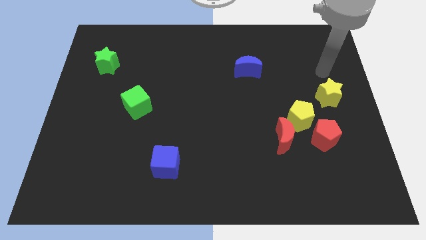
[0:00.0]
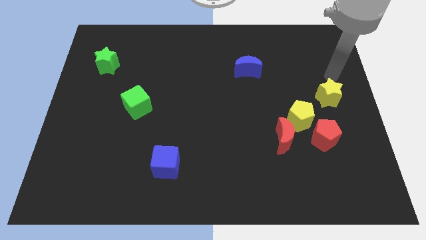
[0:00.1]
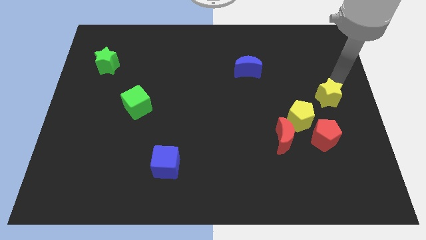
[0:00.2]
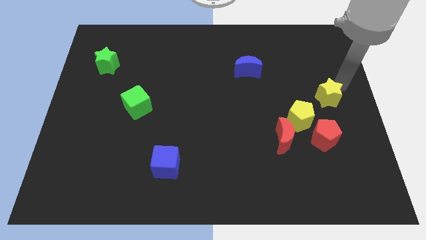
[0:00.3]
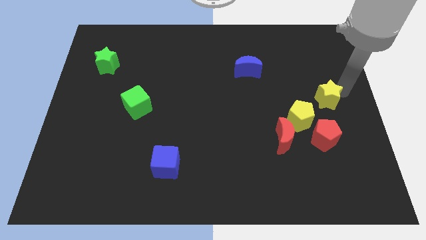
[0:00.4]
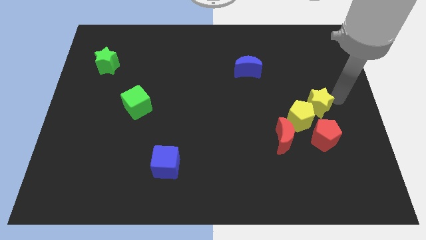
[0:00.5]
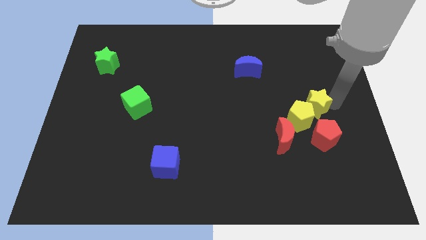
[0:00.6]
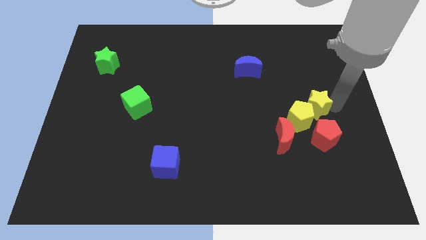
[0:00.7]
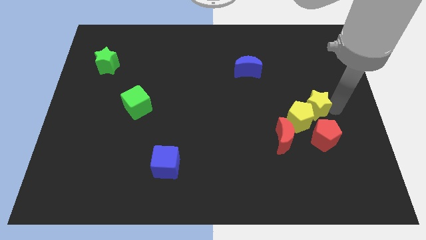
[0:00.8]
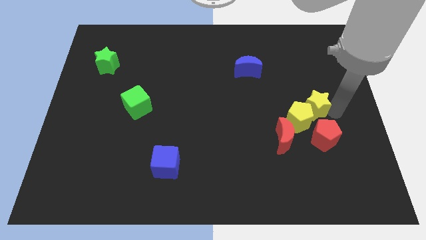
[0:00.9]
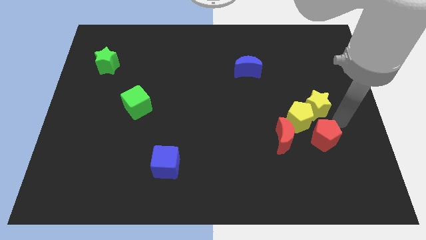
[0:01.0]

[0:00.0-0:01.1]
push the yellow star into the yellow pentagon

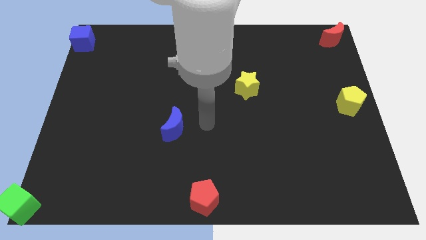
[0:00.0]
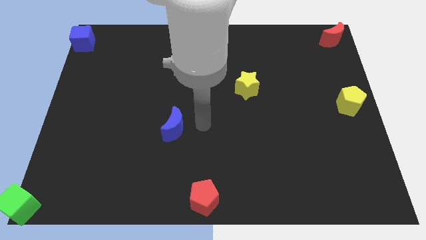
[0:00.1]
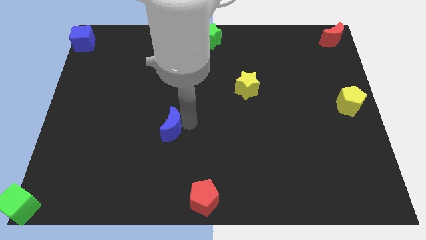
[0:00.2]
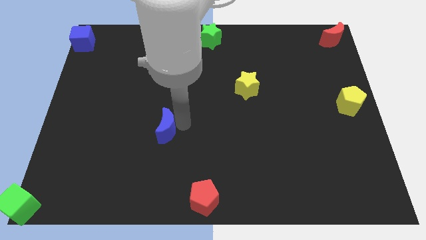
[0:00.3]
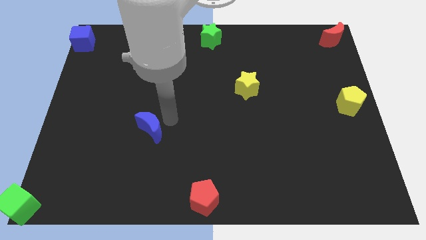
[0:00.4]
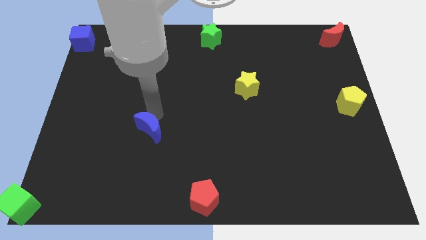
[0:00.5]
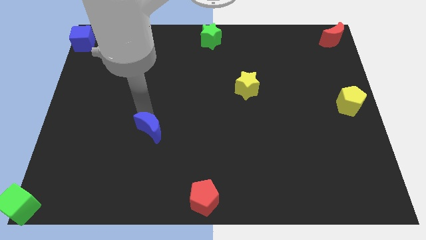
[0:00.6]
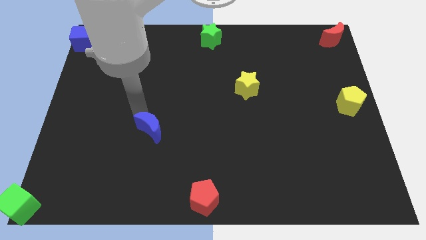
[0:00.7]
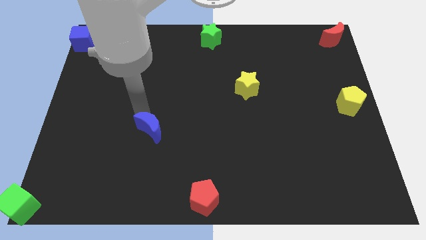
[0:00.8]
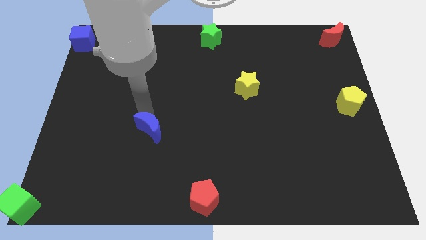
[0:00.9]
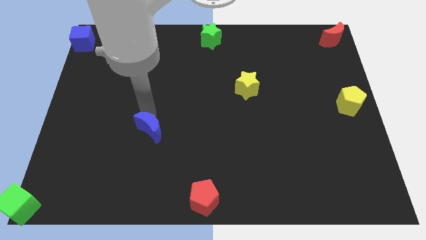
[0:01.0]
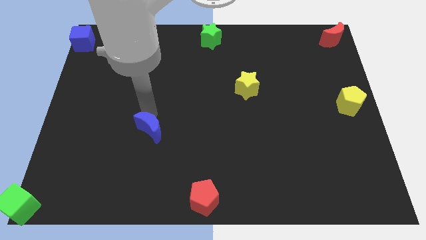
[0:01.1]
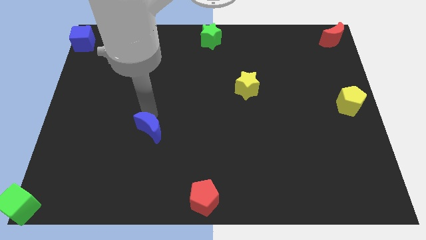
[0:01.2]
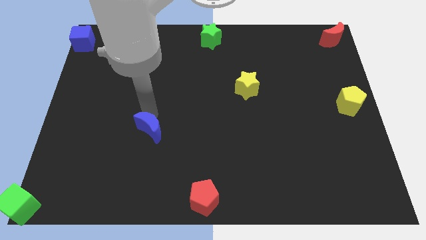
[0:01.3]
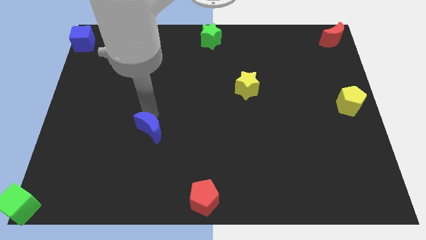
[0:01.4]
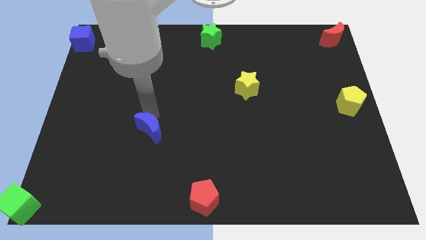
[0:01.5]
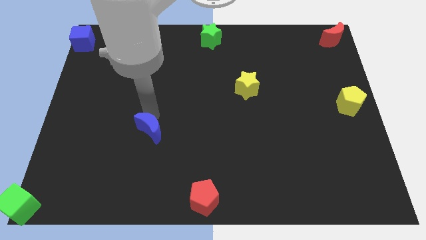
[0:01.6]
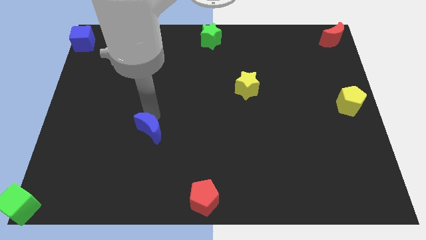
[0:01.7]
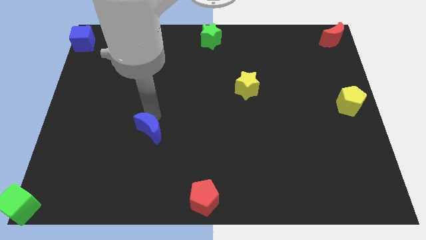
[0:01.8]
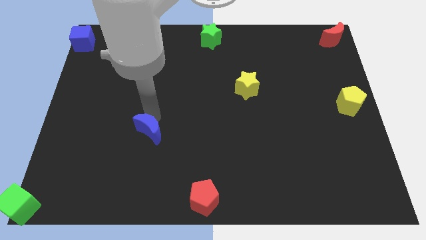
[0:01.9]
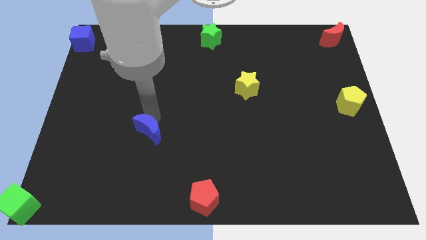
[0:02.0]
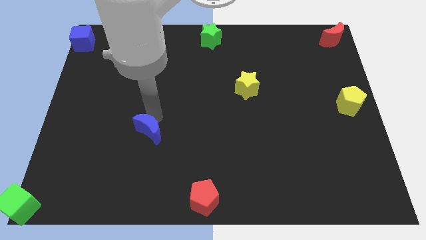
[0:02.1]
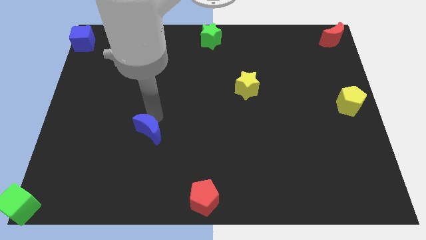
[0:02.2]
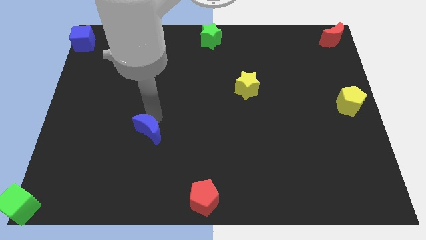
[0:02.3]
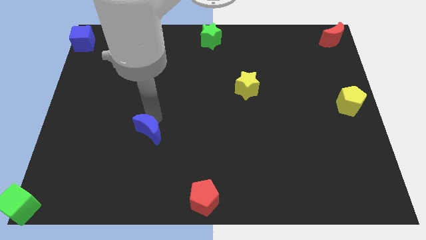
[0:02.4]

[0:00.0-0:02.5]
place the blue crescent diagonal to the red pentagon

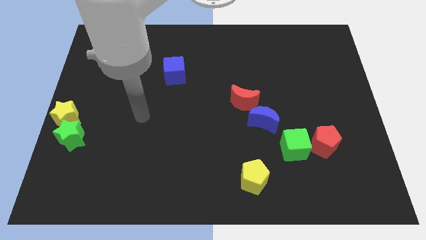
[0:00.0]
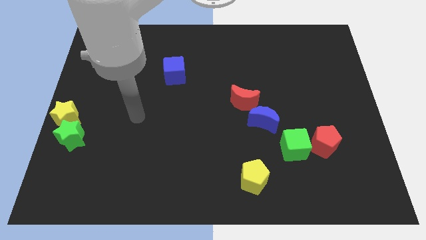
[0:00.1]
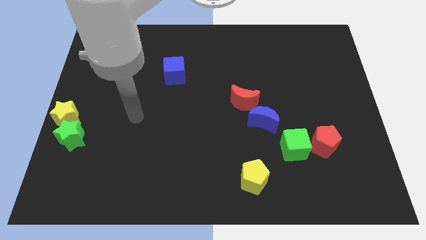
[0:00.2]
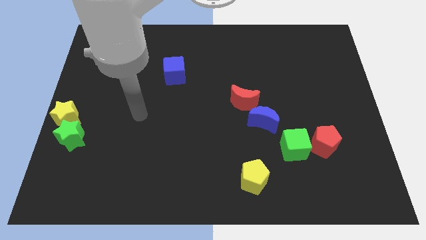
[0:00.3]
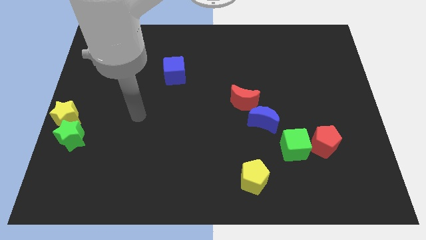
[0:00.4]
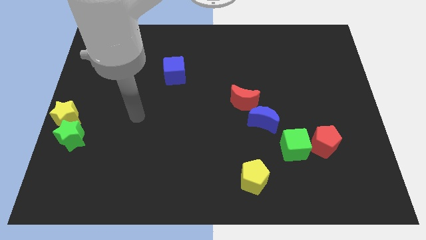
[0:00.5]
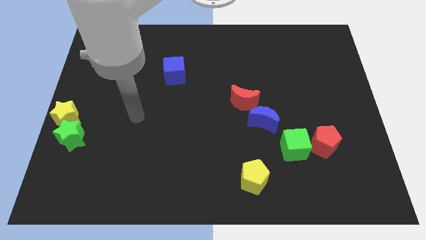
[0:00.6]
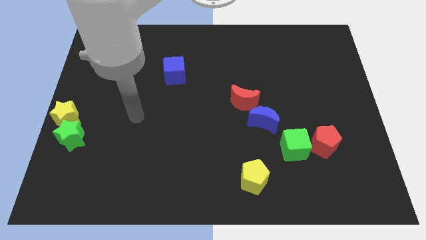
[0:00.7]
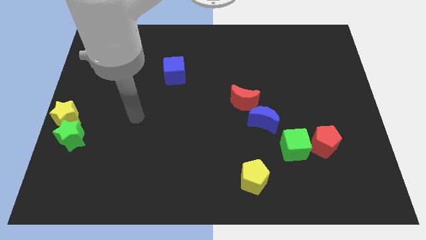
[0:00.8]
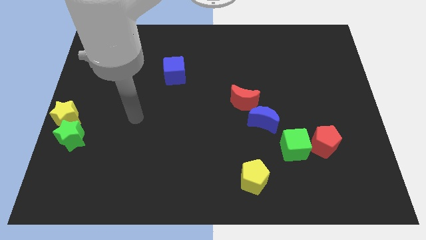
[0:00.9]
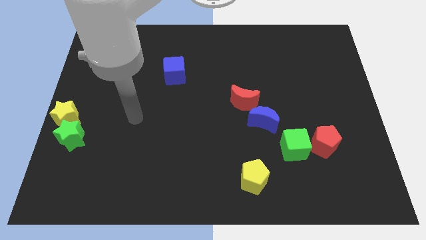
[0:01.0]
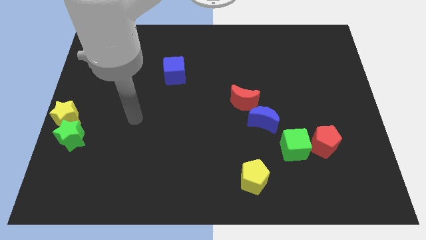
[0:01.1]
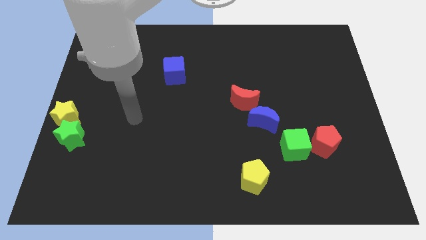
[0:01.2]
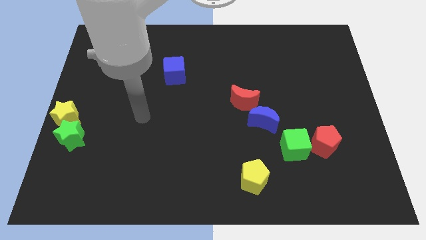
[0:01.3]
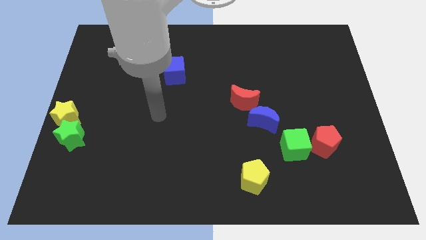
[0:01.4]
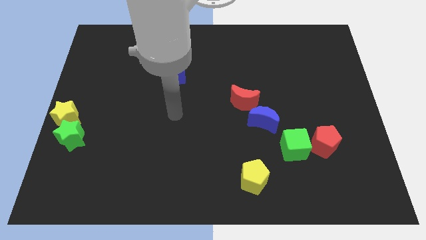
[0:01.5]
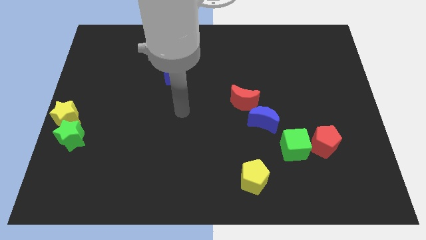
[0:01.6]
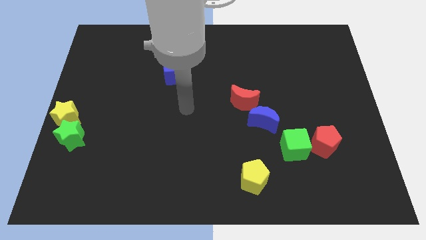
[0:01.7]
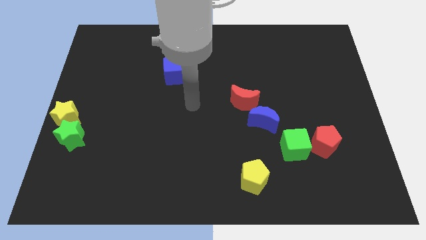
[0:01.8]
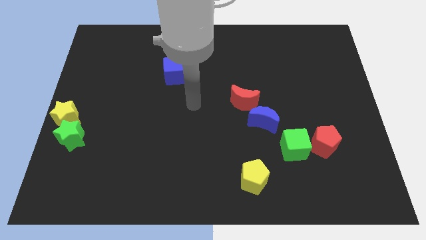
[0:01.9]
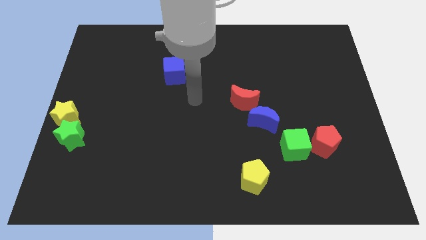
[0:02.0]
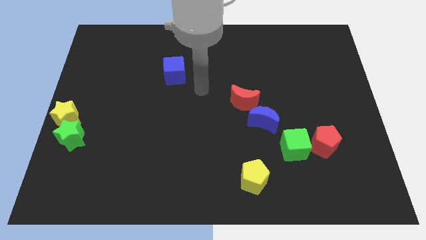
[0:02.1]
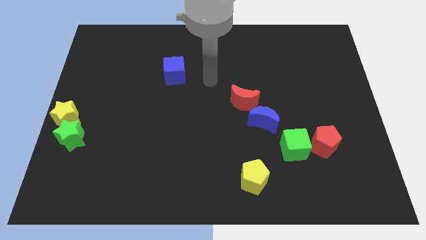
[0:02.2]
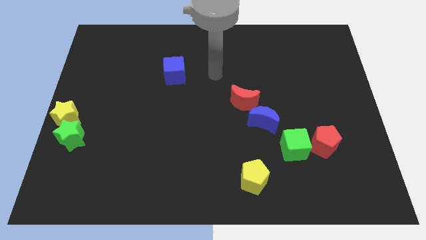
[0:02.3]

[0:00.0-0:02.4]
move arm in between blue cube and red crescent

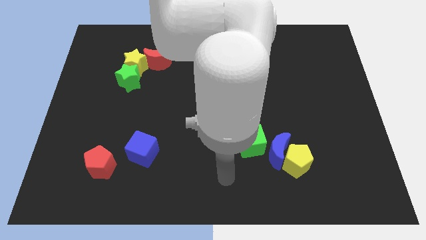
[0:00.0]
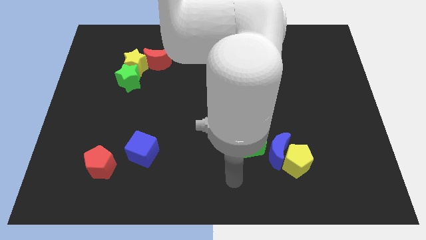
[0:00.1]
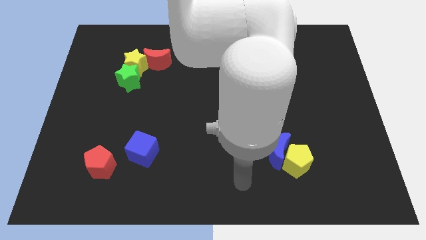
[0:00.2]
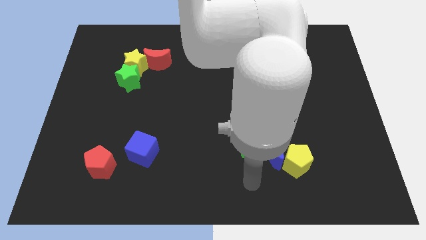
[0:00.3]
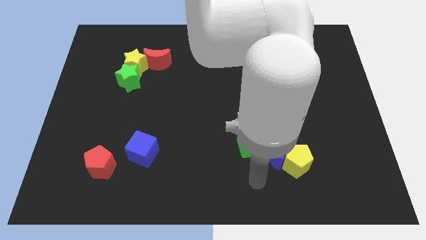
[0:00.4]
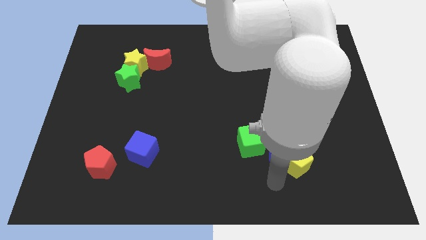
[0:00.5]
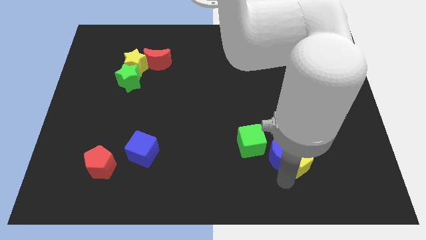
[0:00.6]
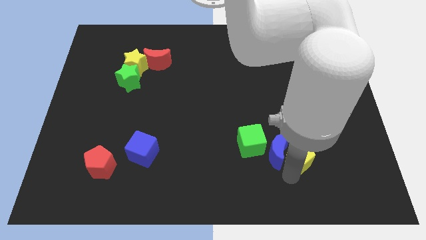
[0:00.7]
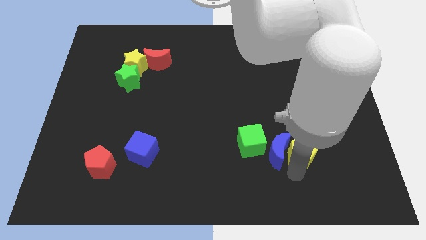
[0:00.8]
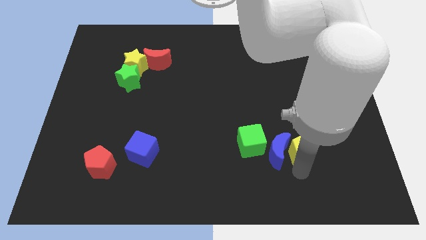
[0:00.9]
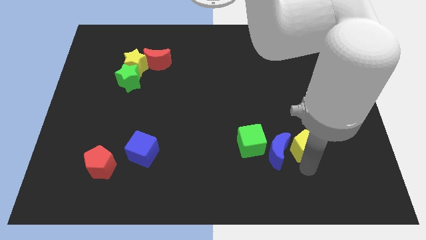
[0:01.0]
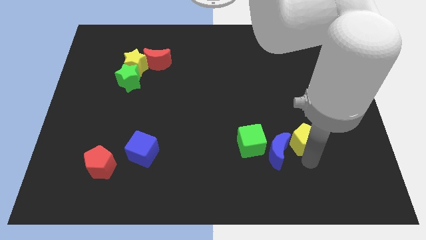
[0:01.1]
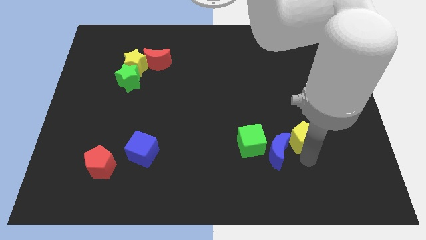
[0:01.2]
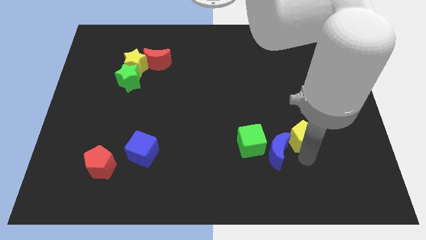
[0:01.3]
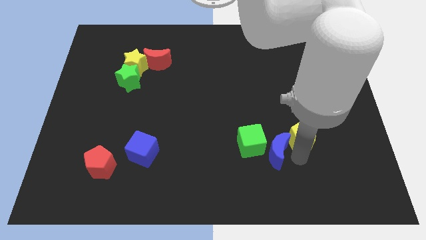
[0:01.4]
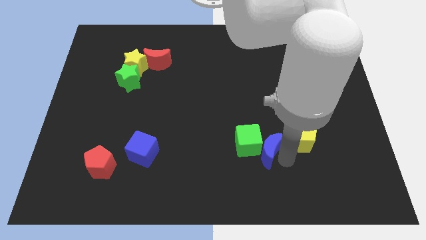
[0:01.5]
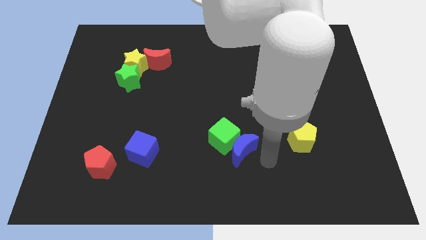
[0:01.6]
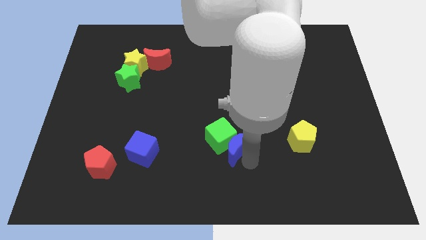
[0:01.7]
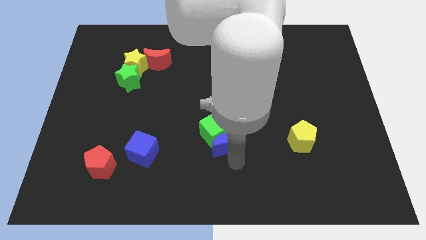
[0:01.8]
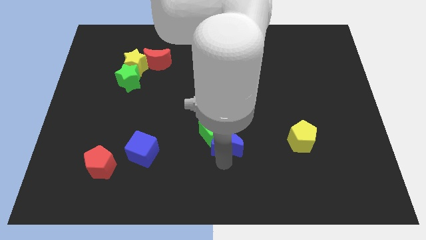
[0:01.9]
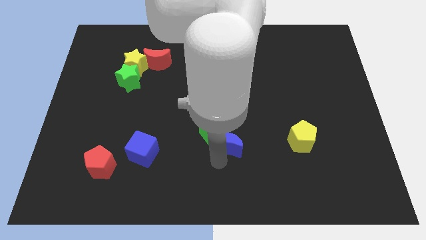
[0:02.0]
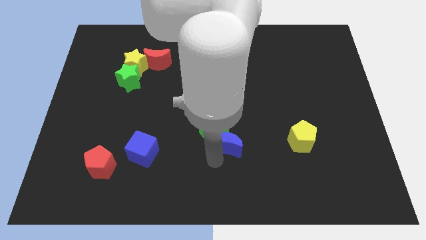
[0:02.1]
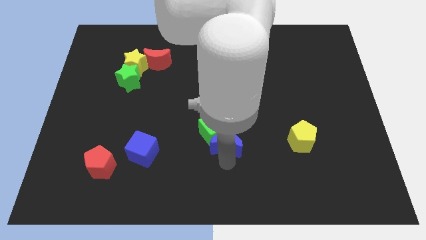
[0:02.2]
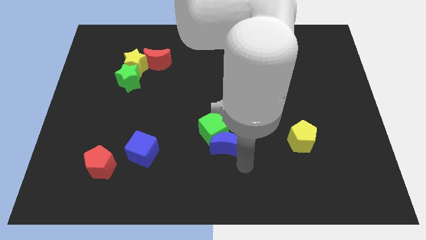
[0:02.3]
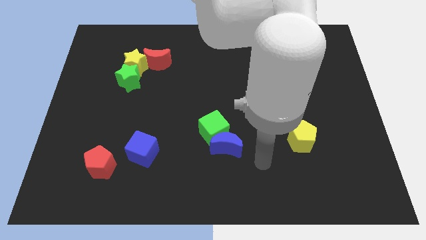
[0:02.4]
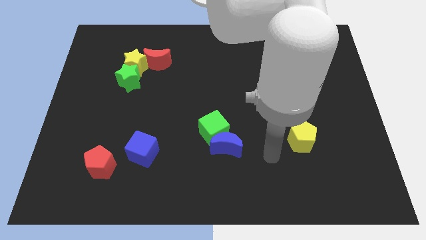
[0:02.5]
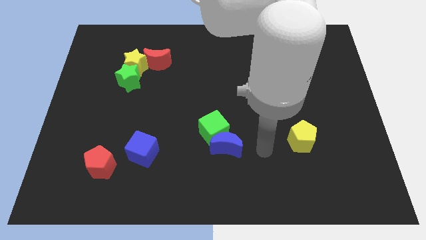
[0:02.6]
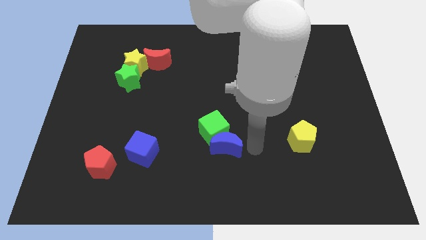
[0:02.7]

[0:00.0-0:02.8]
push blue crescent below green cube

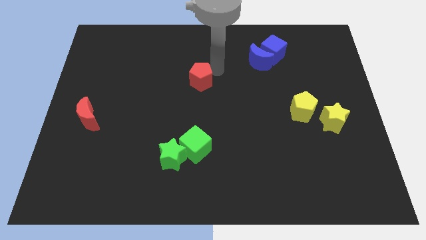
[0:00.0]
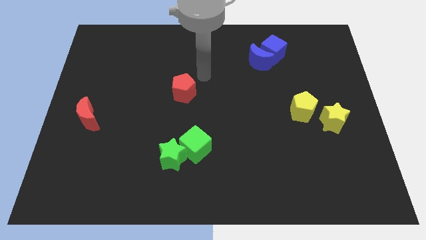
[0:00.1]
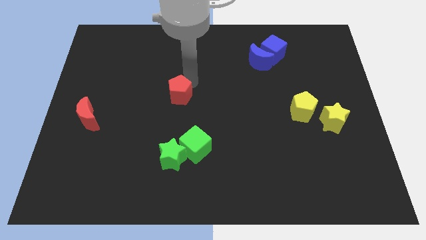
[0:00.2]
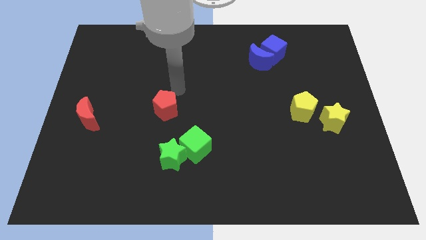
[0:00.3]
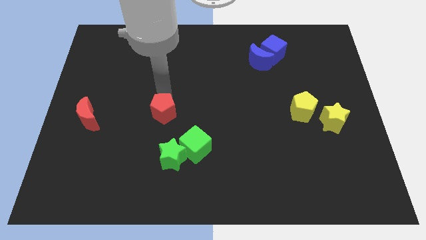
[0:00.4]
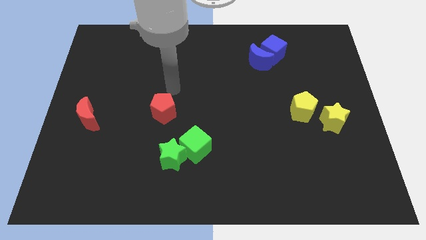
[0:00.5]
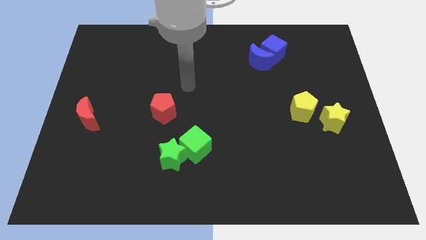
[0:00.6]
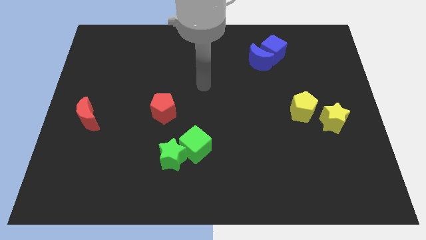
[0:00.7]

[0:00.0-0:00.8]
push the red pentagon in parallel to the red crescent
